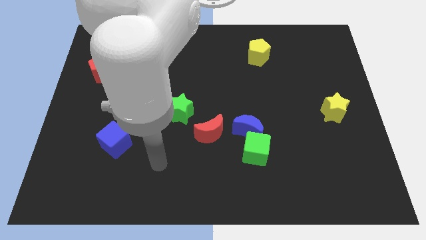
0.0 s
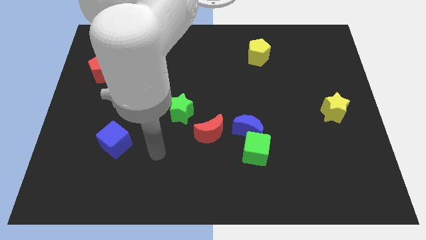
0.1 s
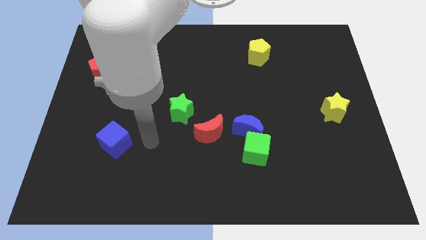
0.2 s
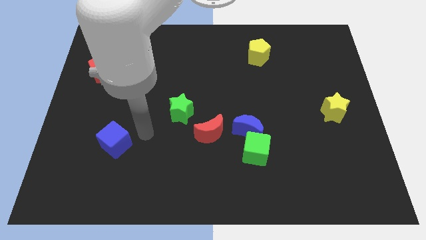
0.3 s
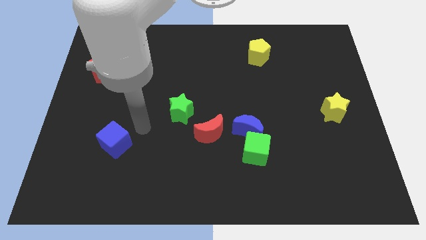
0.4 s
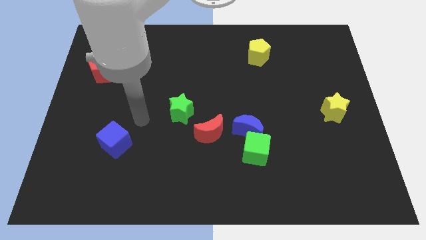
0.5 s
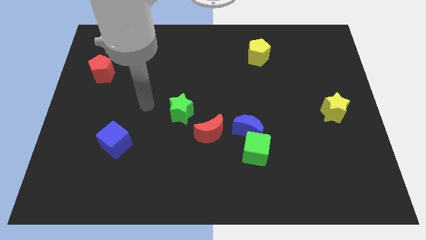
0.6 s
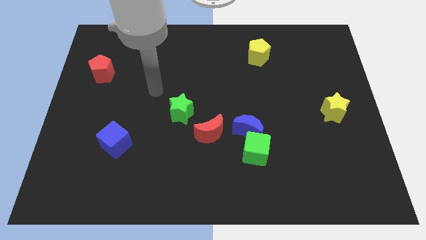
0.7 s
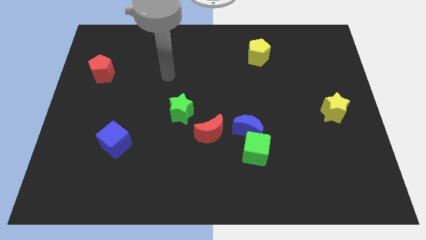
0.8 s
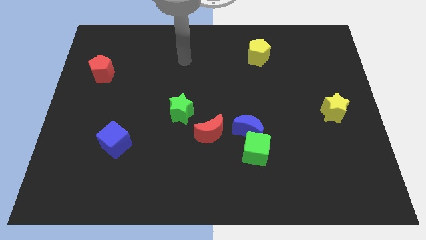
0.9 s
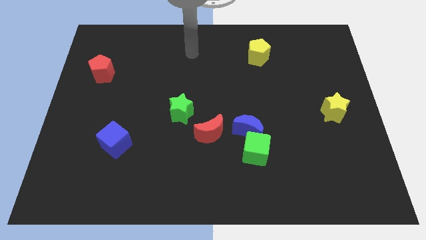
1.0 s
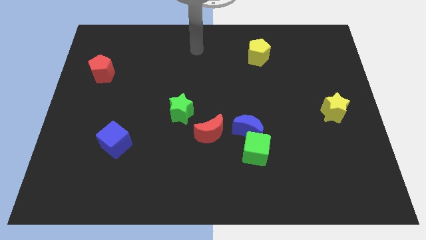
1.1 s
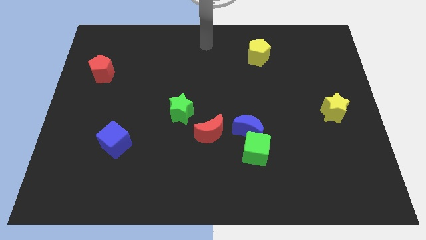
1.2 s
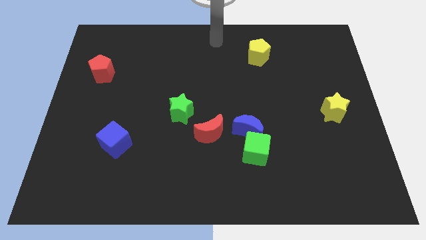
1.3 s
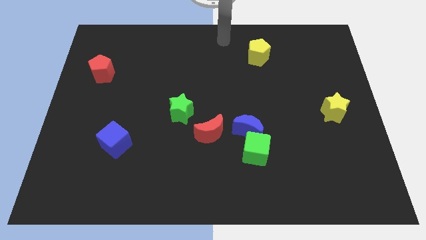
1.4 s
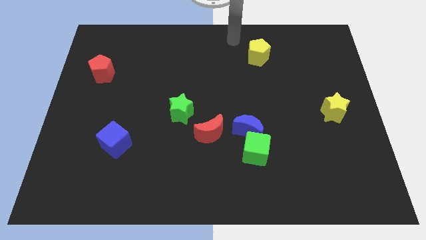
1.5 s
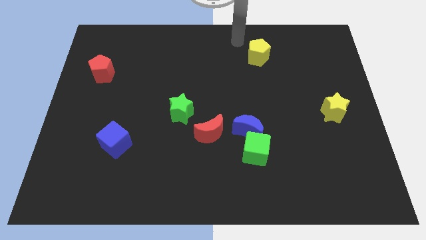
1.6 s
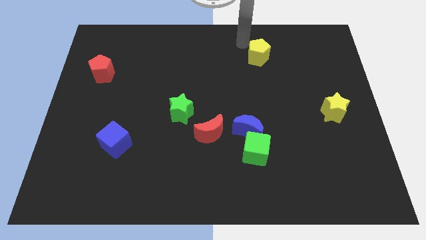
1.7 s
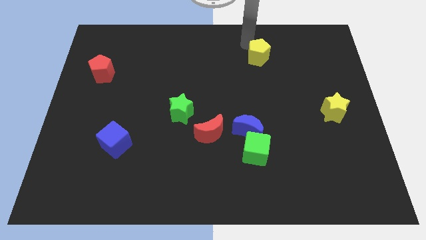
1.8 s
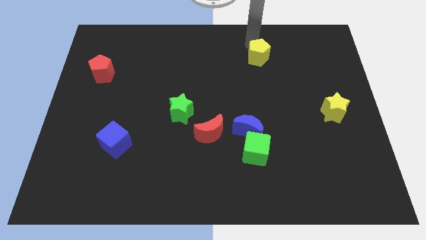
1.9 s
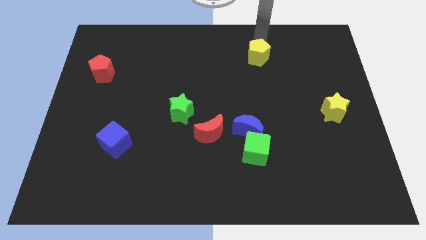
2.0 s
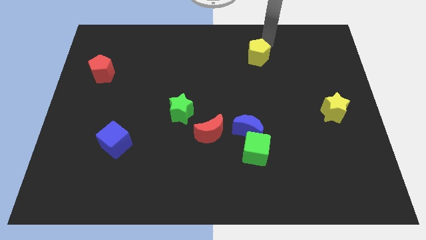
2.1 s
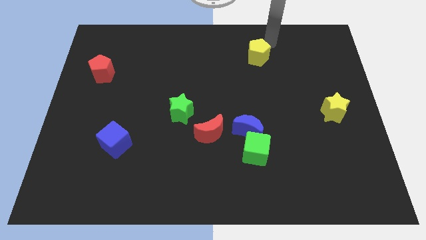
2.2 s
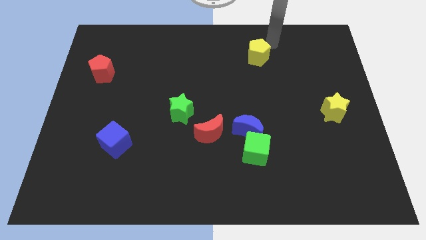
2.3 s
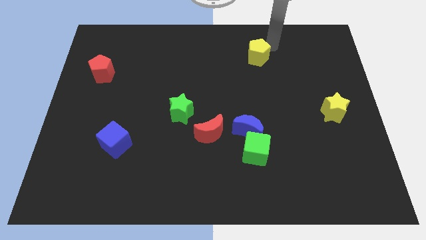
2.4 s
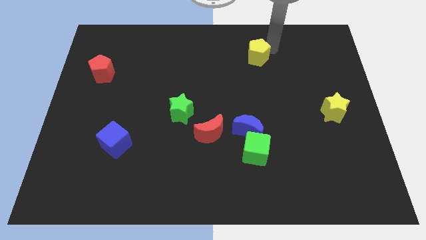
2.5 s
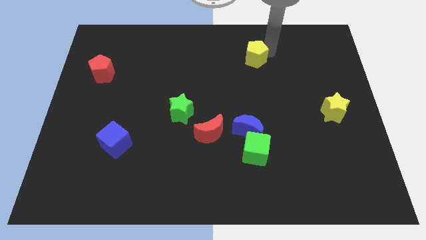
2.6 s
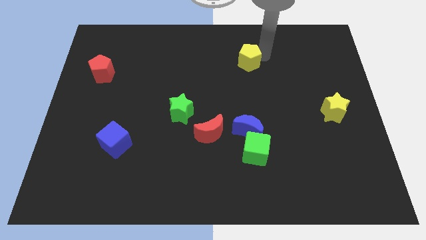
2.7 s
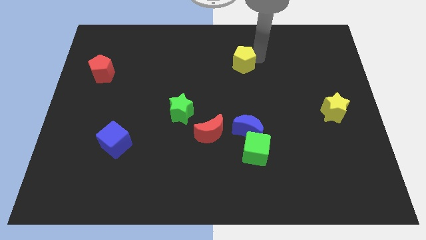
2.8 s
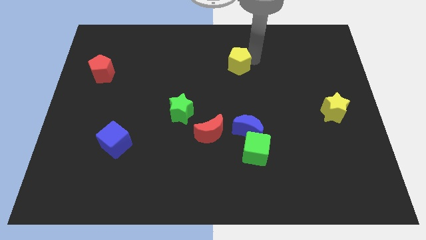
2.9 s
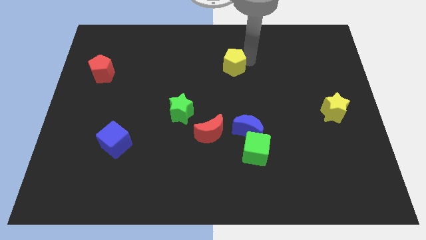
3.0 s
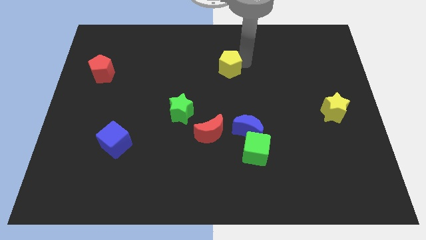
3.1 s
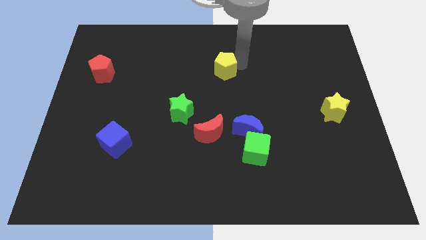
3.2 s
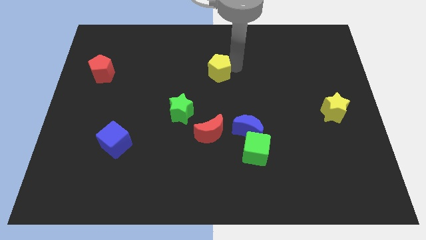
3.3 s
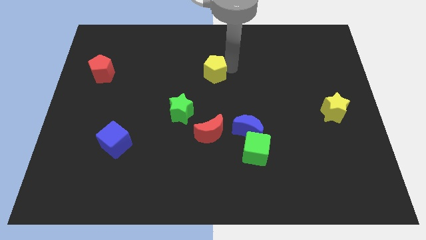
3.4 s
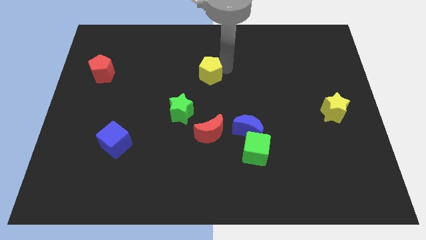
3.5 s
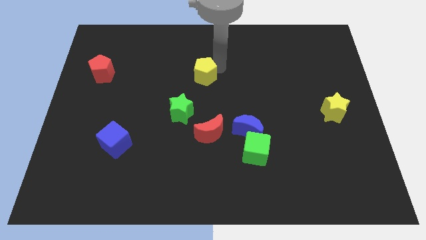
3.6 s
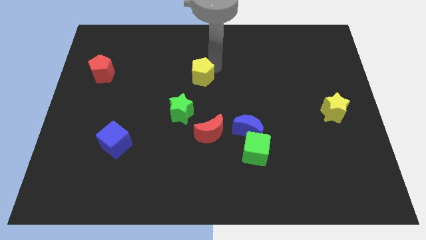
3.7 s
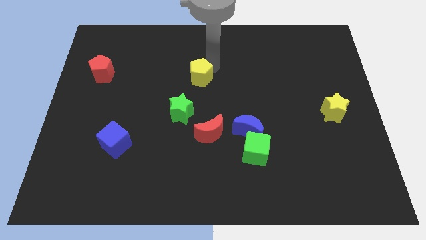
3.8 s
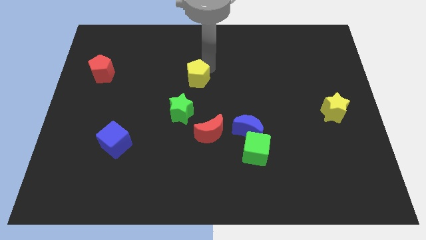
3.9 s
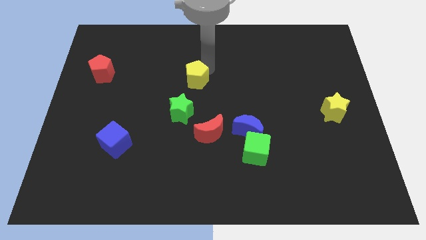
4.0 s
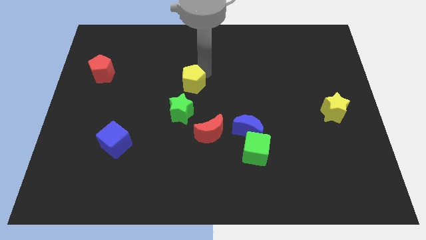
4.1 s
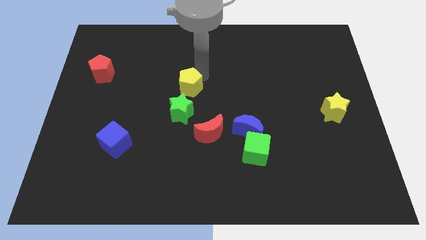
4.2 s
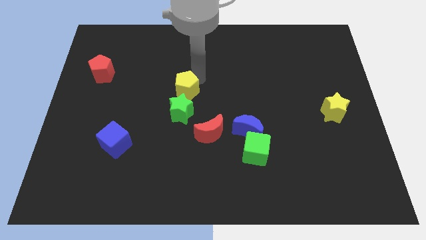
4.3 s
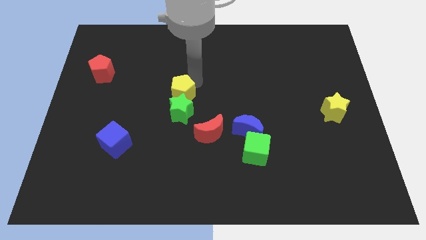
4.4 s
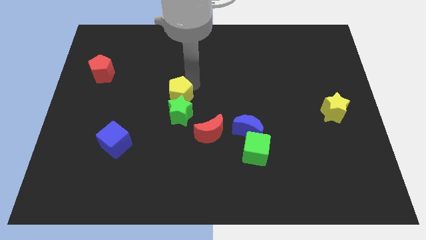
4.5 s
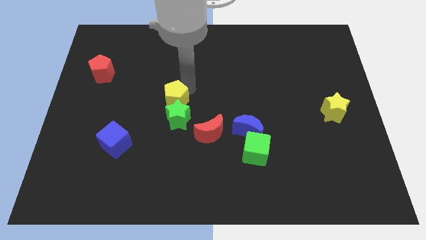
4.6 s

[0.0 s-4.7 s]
move the yellow pentagon towards the green star

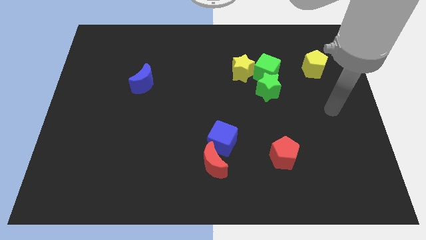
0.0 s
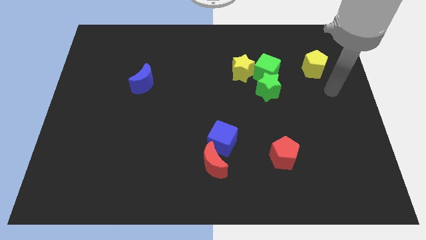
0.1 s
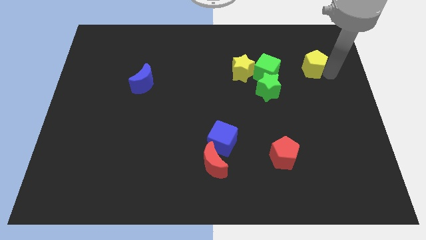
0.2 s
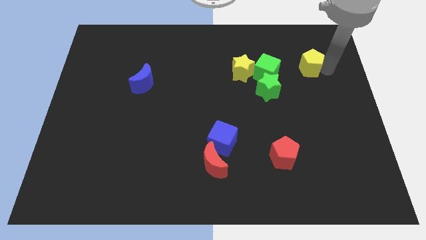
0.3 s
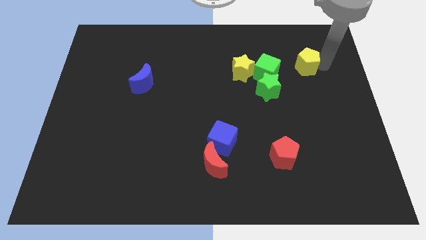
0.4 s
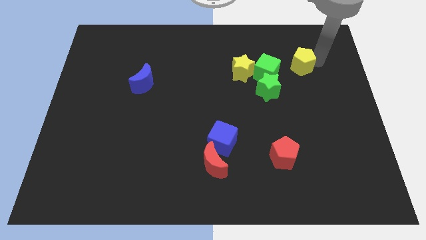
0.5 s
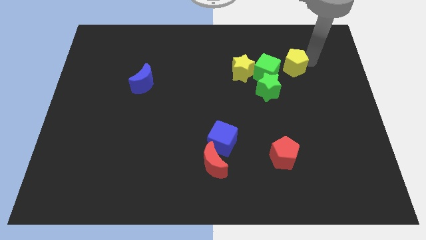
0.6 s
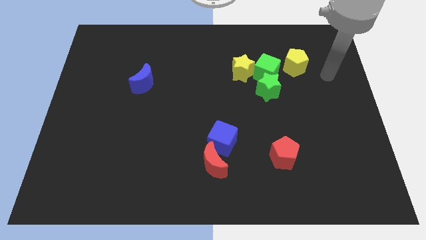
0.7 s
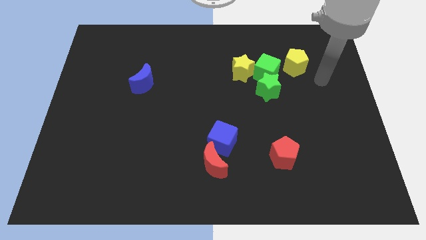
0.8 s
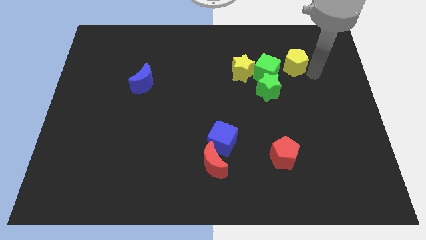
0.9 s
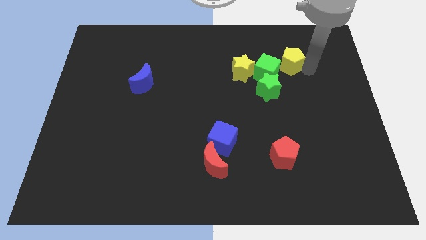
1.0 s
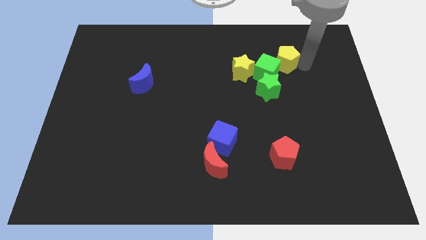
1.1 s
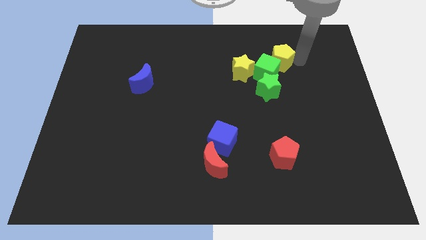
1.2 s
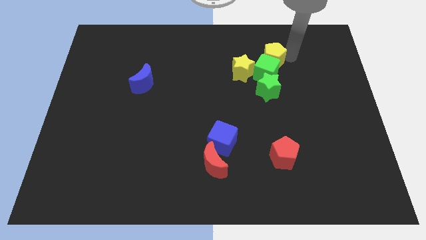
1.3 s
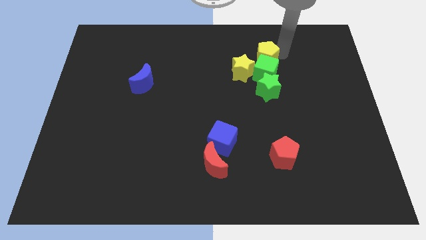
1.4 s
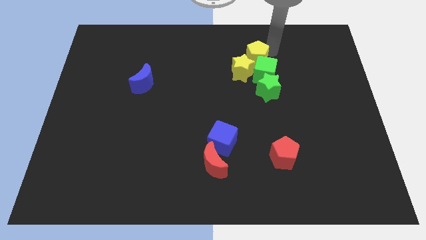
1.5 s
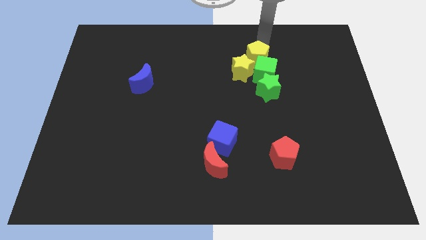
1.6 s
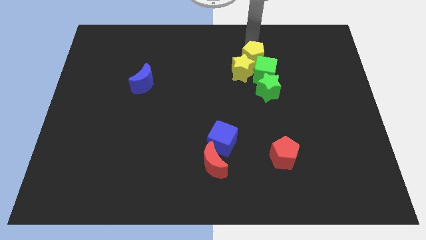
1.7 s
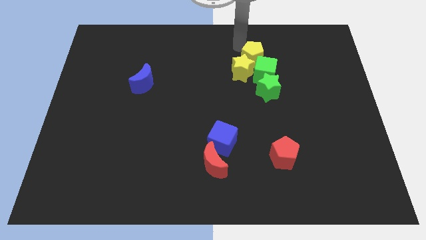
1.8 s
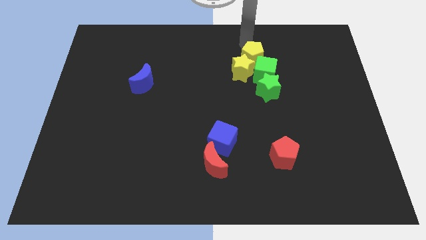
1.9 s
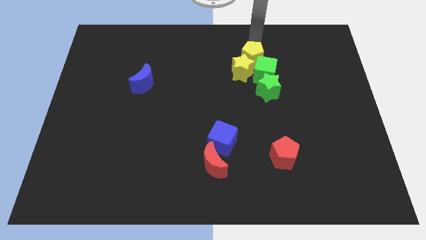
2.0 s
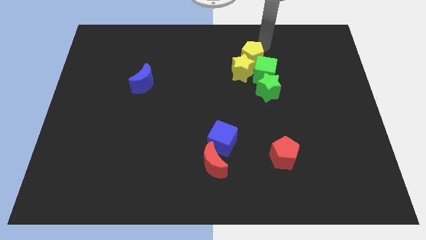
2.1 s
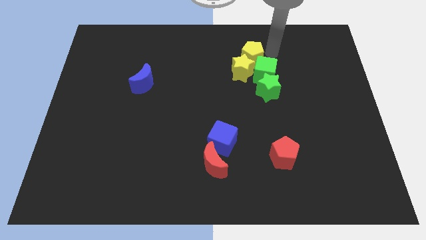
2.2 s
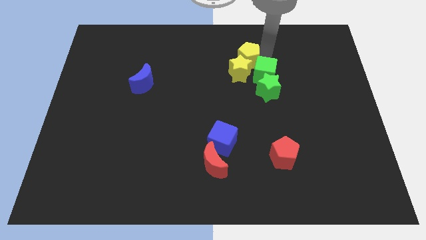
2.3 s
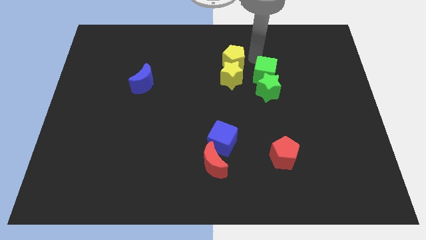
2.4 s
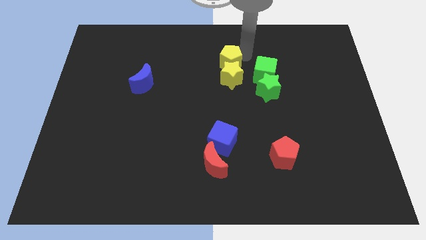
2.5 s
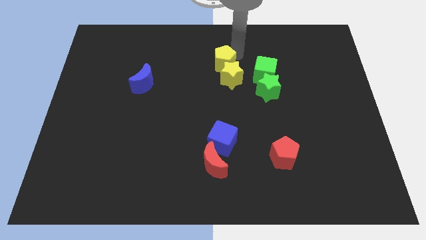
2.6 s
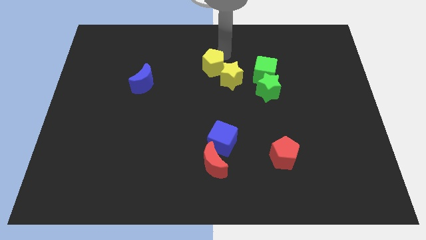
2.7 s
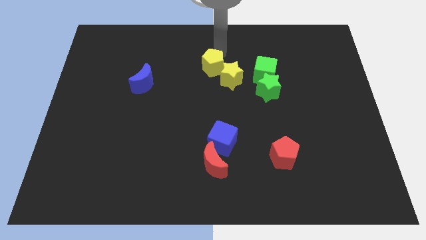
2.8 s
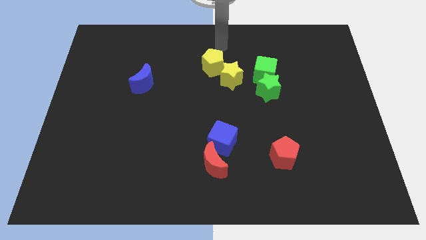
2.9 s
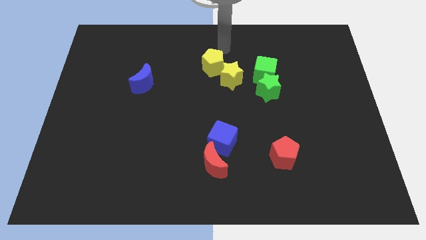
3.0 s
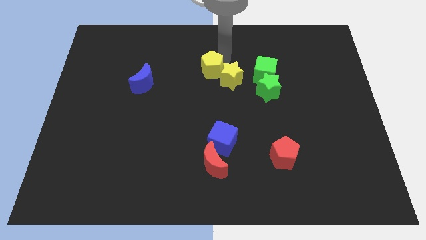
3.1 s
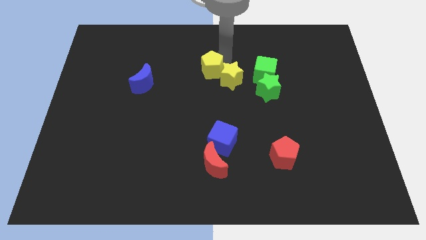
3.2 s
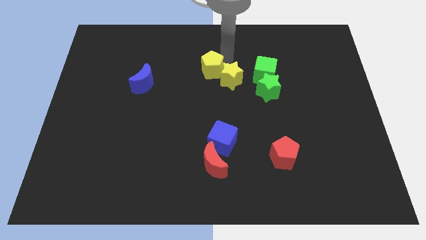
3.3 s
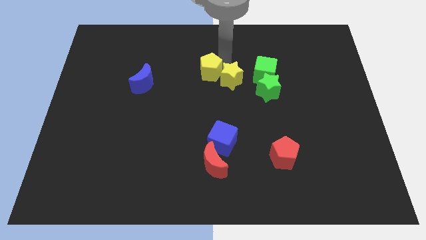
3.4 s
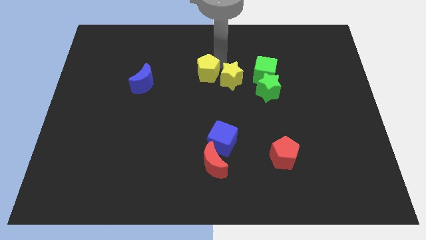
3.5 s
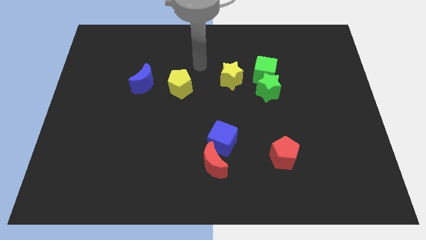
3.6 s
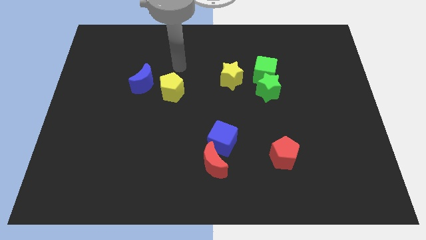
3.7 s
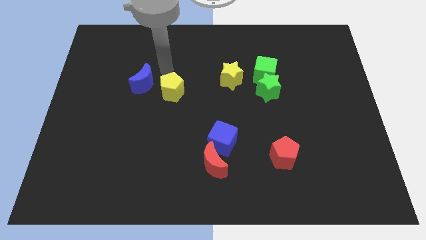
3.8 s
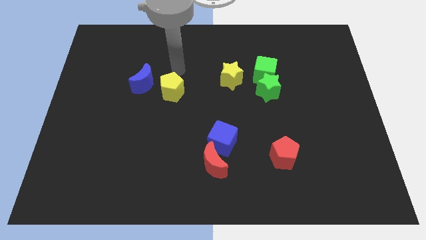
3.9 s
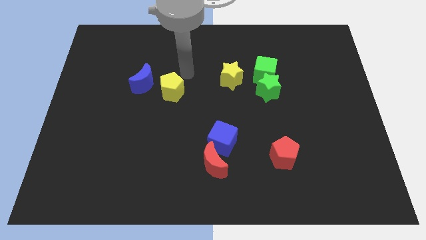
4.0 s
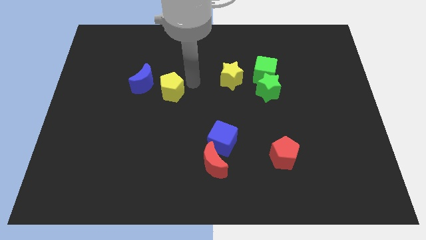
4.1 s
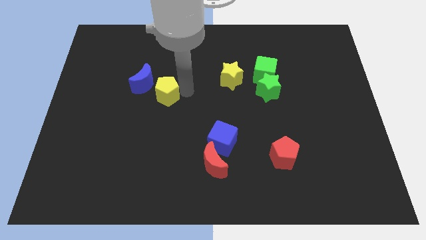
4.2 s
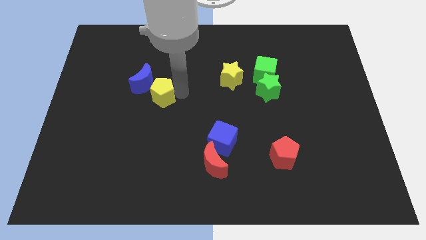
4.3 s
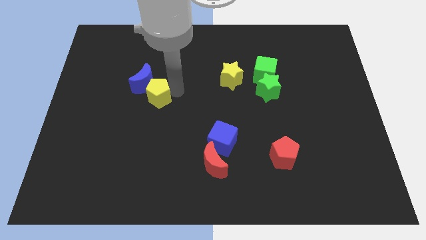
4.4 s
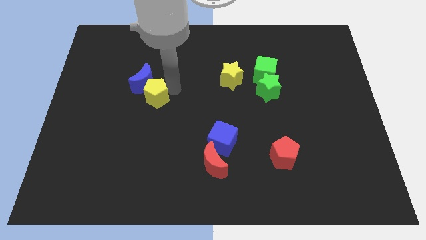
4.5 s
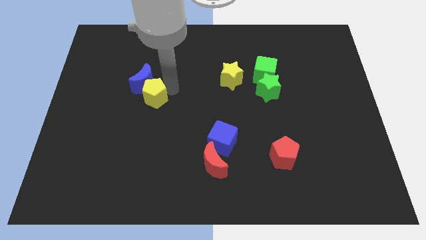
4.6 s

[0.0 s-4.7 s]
put the yellow pentagon towards the blue moon
